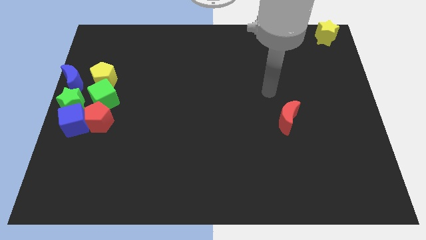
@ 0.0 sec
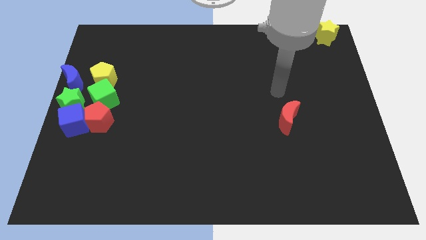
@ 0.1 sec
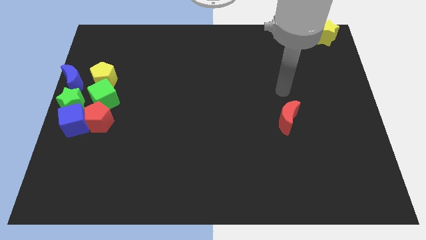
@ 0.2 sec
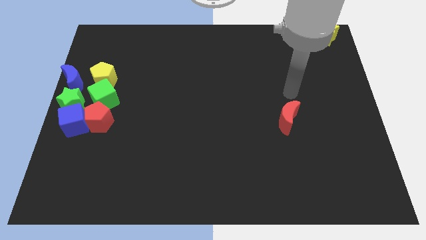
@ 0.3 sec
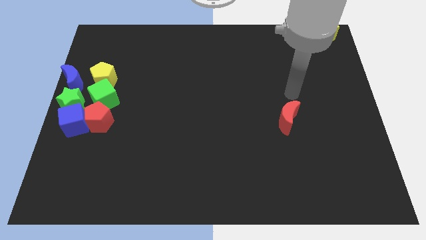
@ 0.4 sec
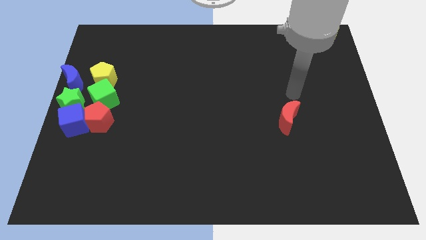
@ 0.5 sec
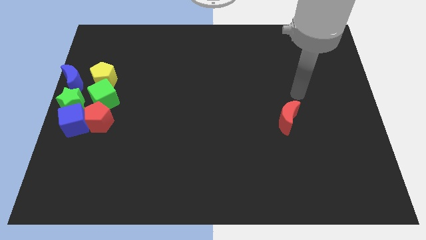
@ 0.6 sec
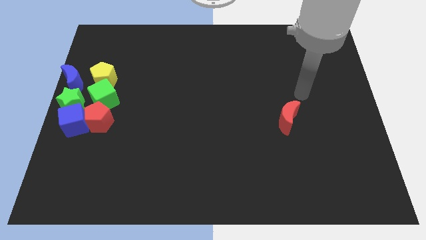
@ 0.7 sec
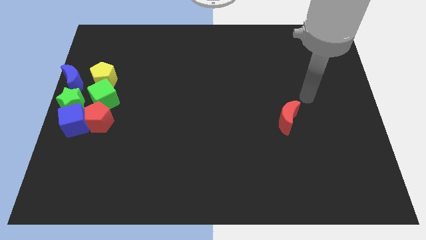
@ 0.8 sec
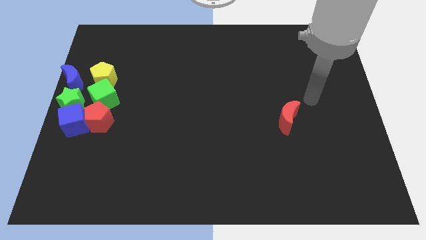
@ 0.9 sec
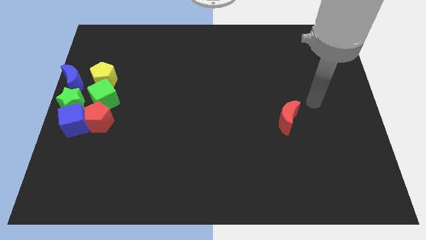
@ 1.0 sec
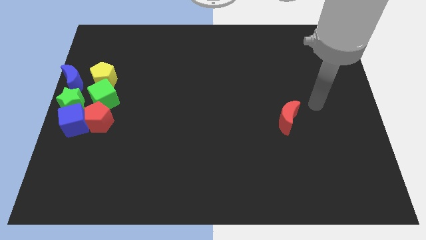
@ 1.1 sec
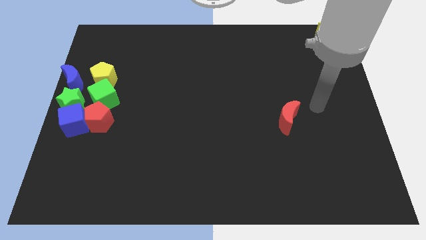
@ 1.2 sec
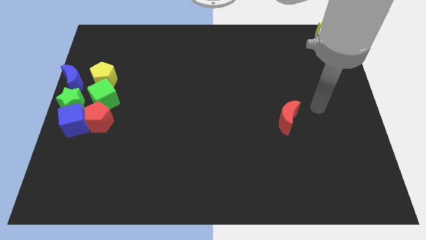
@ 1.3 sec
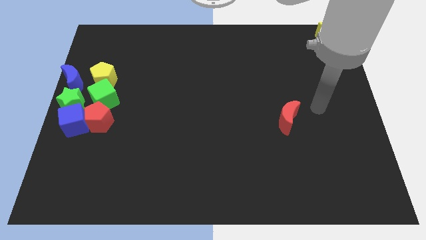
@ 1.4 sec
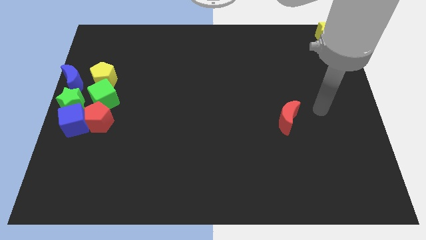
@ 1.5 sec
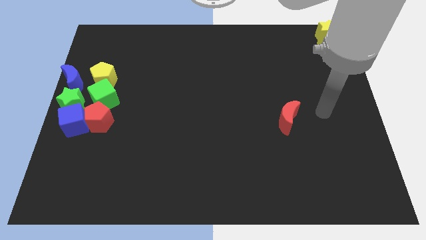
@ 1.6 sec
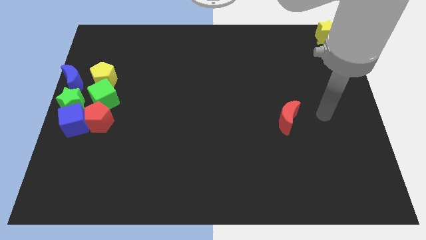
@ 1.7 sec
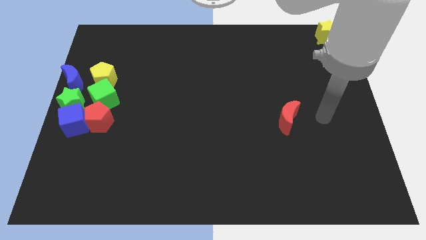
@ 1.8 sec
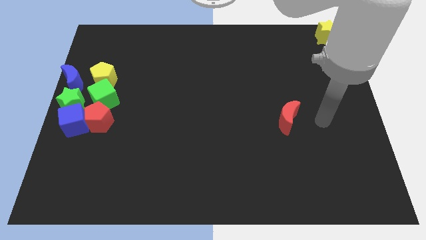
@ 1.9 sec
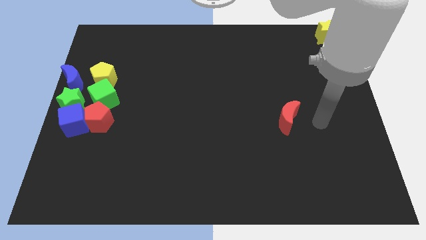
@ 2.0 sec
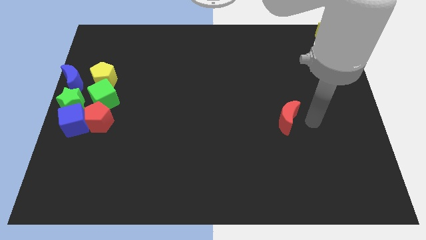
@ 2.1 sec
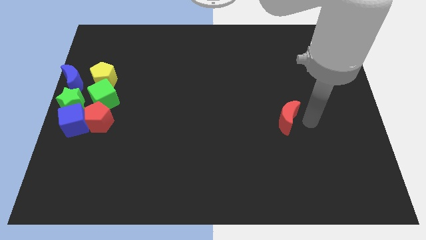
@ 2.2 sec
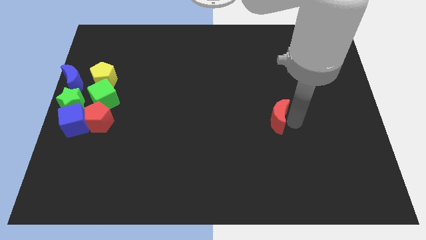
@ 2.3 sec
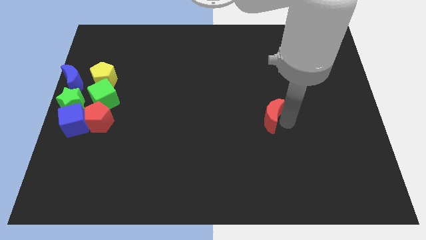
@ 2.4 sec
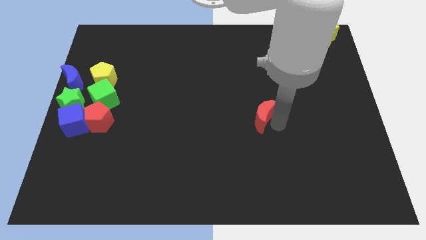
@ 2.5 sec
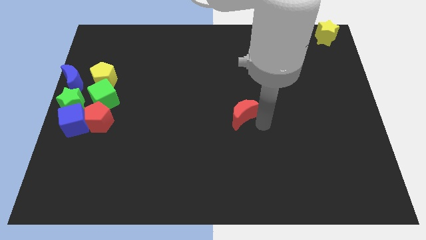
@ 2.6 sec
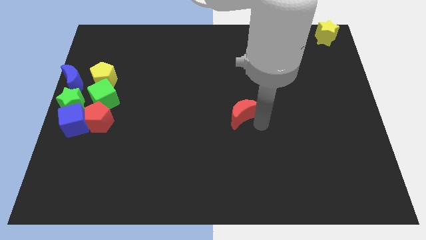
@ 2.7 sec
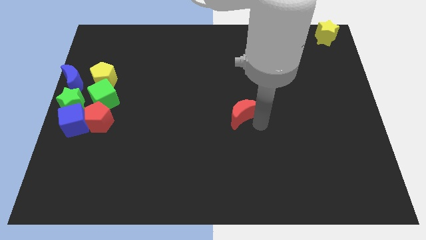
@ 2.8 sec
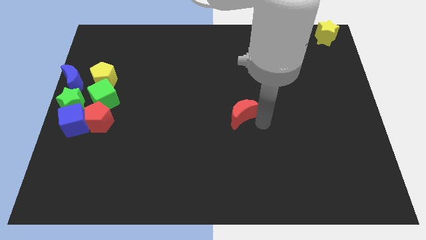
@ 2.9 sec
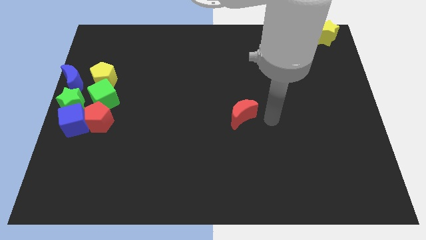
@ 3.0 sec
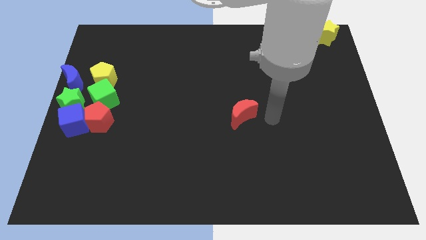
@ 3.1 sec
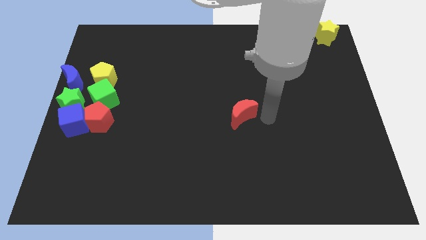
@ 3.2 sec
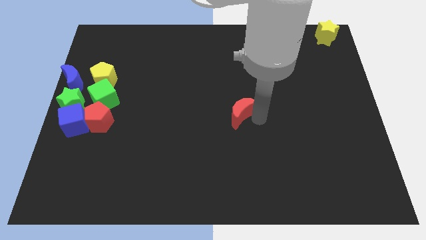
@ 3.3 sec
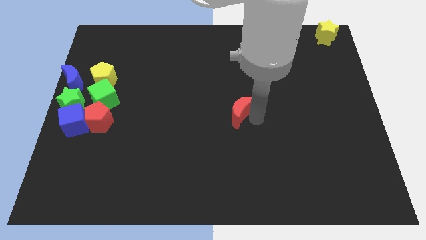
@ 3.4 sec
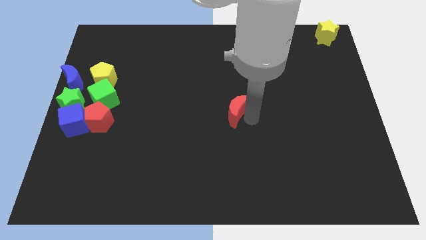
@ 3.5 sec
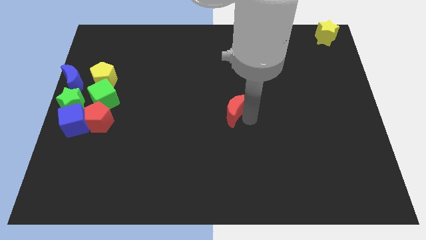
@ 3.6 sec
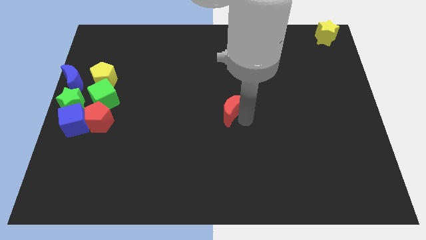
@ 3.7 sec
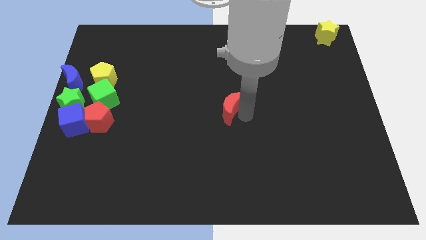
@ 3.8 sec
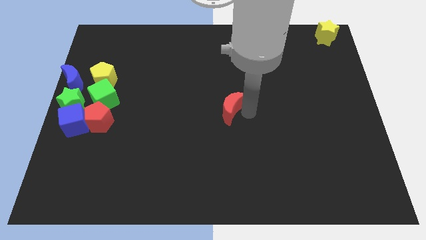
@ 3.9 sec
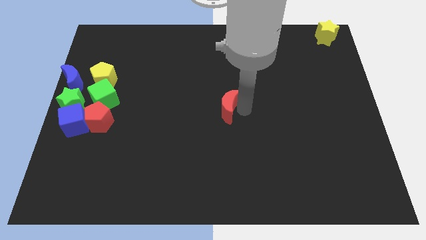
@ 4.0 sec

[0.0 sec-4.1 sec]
move red moon to the center

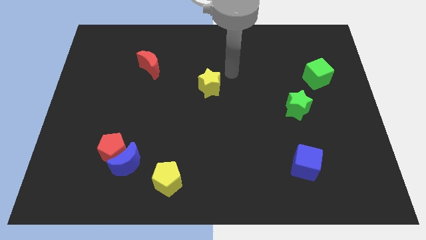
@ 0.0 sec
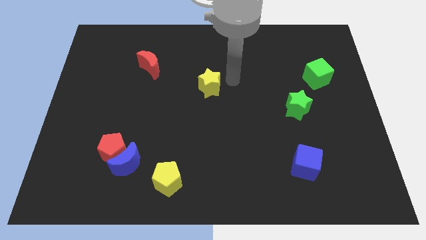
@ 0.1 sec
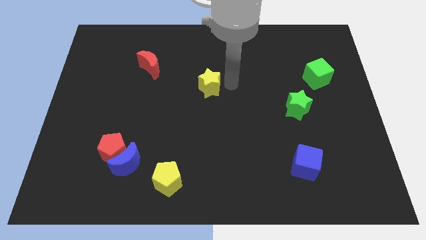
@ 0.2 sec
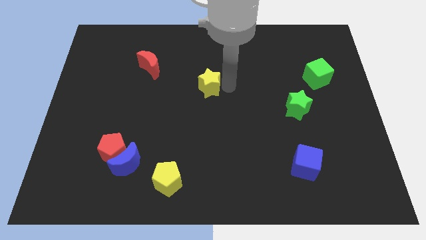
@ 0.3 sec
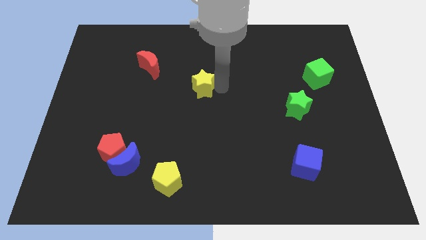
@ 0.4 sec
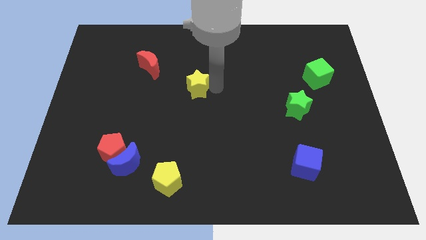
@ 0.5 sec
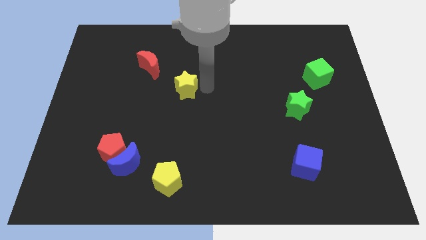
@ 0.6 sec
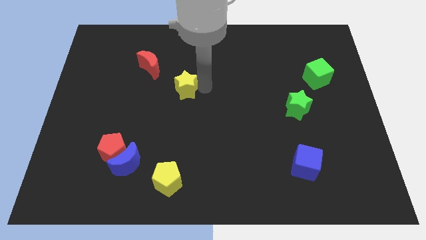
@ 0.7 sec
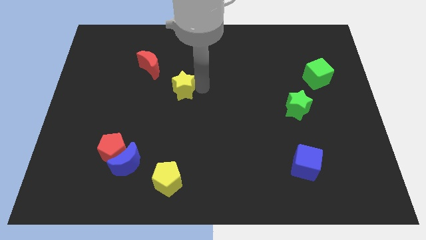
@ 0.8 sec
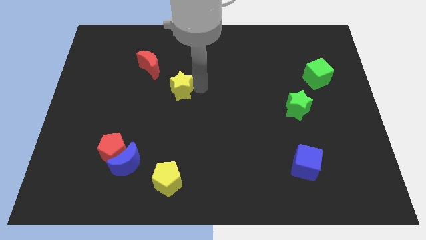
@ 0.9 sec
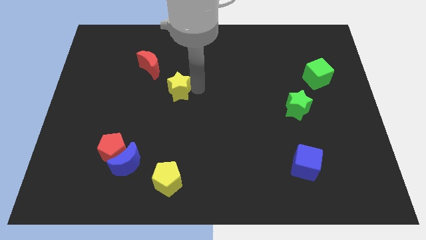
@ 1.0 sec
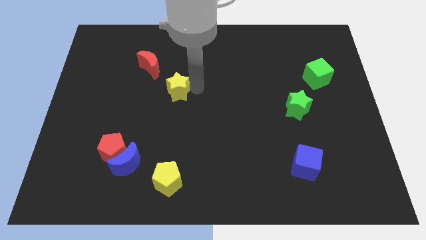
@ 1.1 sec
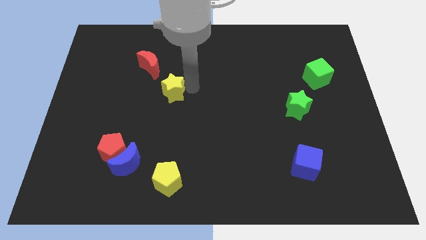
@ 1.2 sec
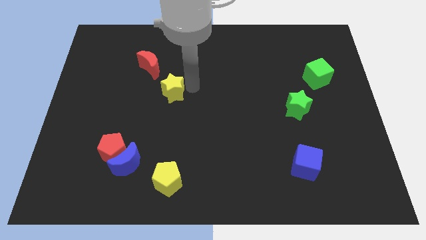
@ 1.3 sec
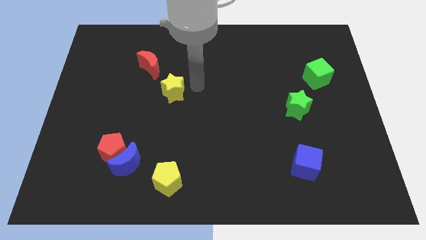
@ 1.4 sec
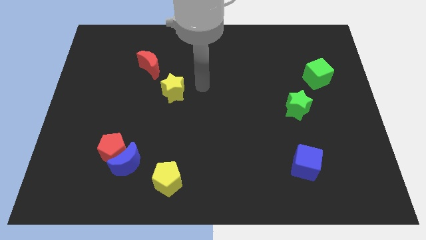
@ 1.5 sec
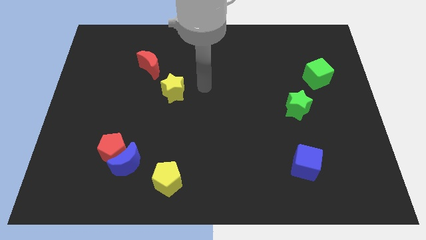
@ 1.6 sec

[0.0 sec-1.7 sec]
place yellow star to the bottom right red moon

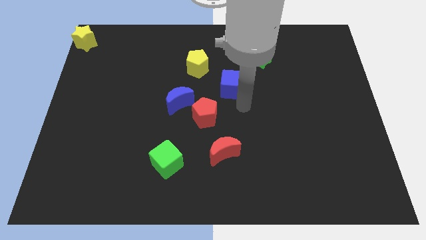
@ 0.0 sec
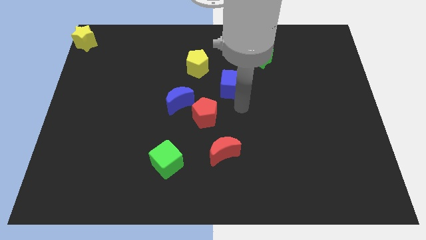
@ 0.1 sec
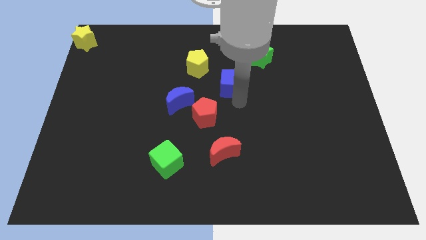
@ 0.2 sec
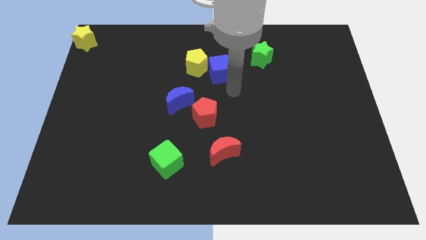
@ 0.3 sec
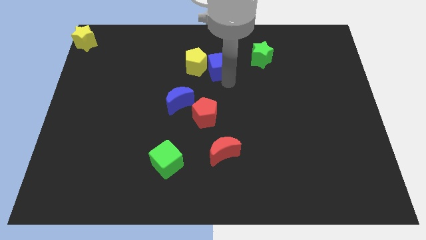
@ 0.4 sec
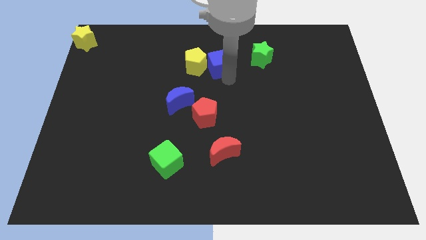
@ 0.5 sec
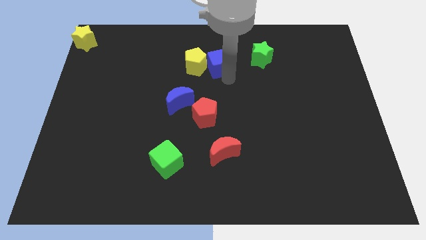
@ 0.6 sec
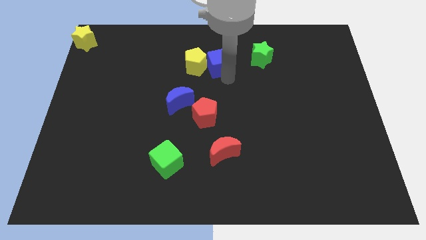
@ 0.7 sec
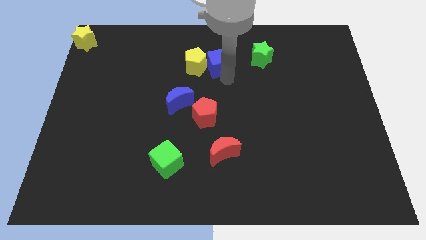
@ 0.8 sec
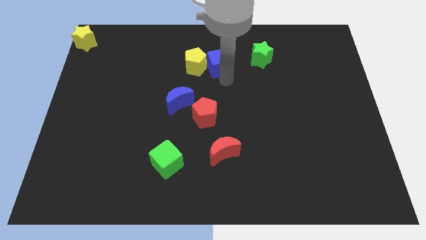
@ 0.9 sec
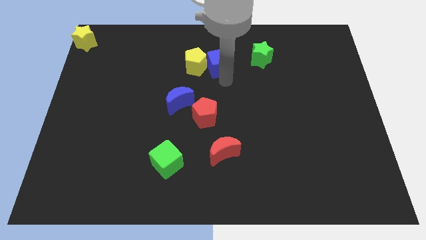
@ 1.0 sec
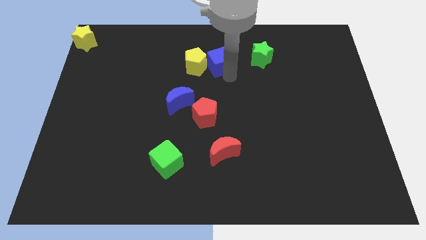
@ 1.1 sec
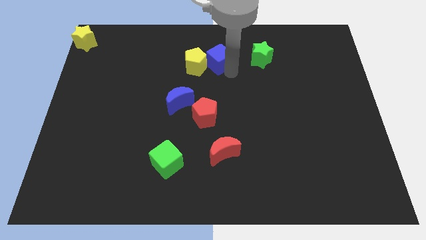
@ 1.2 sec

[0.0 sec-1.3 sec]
push the blue cube into the yellow pentagon

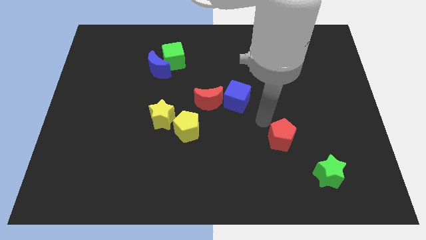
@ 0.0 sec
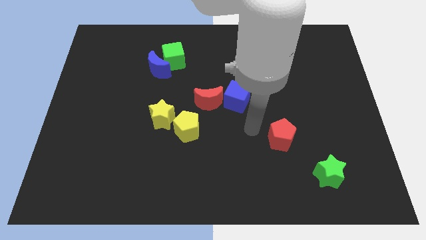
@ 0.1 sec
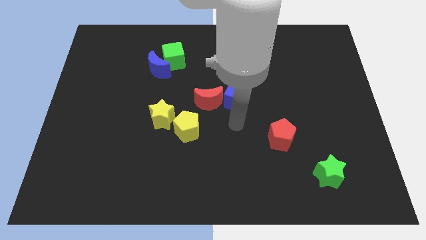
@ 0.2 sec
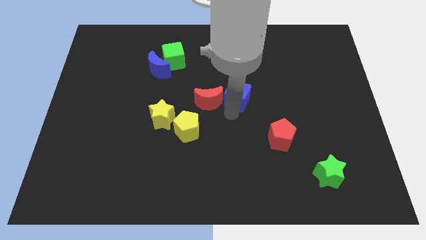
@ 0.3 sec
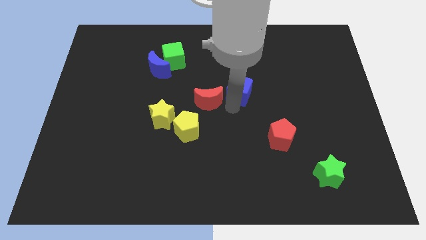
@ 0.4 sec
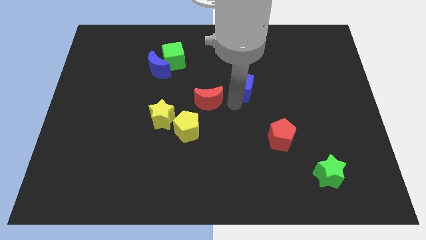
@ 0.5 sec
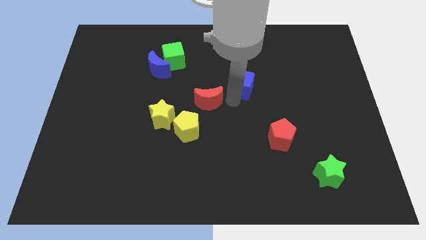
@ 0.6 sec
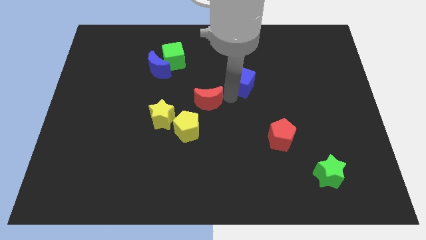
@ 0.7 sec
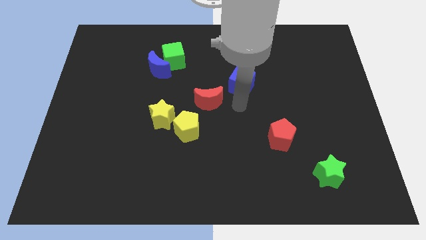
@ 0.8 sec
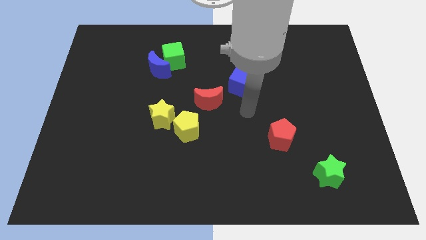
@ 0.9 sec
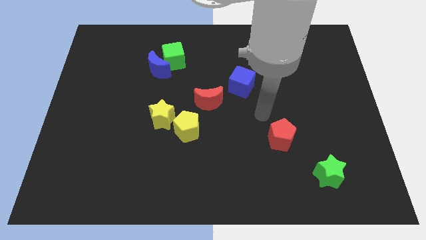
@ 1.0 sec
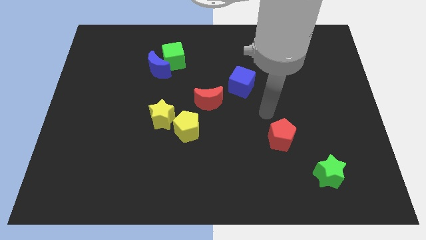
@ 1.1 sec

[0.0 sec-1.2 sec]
slightly push the blue cube towards the top of the board

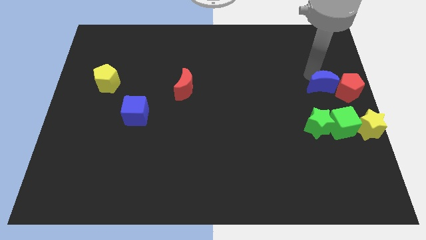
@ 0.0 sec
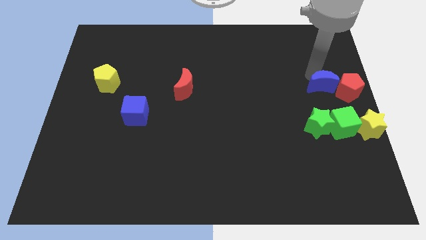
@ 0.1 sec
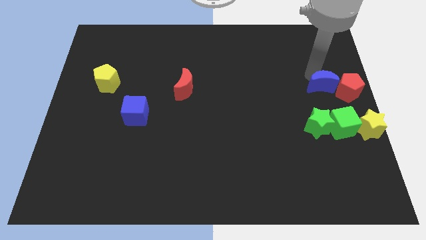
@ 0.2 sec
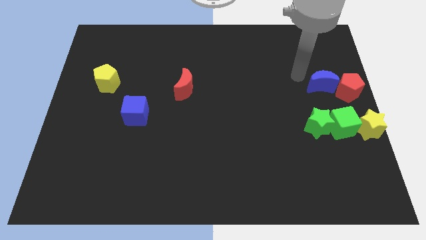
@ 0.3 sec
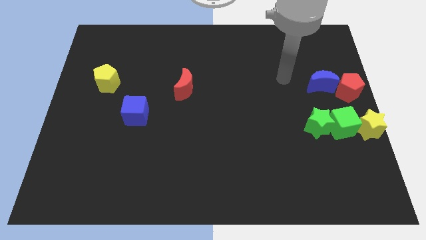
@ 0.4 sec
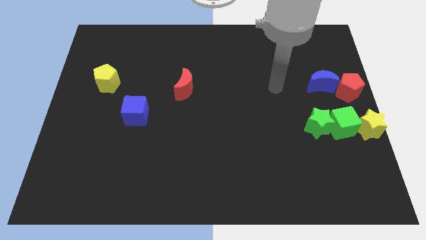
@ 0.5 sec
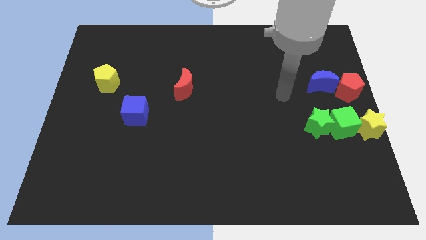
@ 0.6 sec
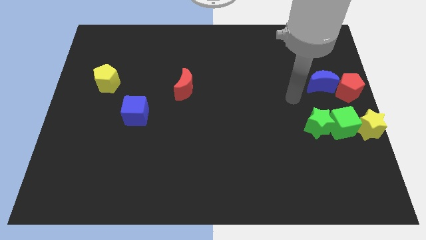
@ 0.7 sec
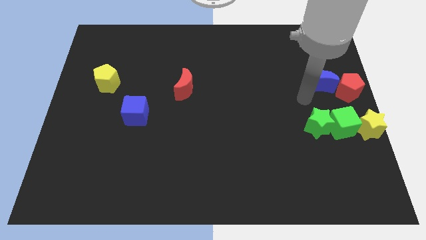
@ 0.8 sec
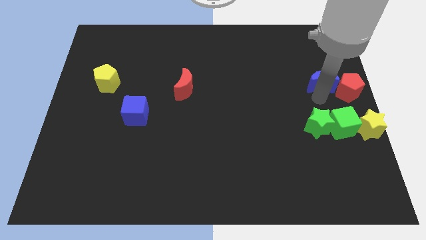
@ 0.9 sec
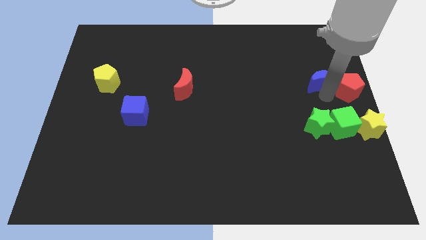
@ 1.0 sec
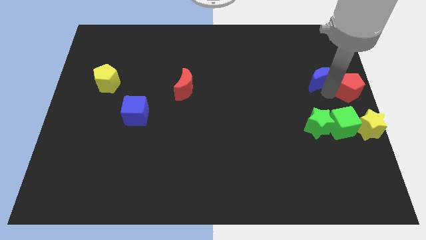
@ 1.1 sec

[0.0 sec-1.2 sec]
move your arm to the bottom side of the blue moon
